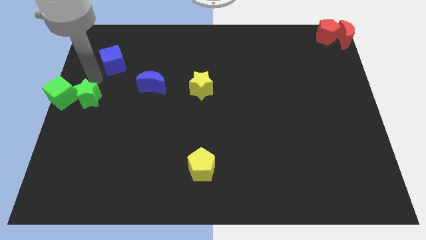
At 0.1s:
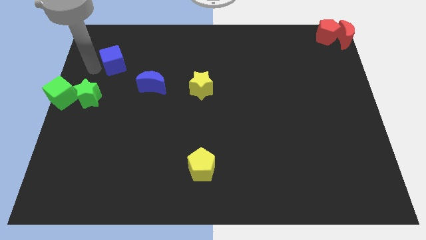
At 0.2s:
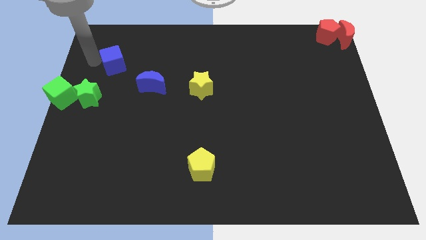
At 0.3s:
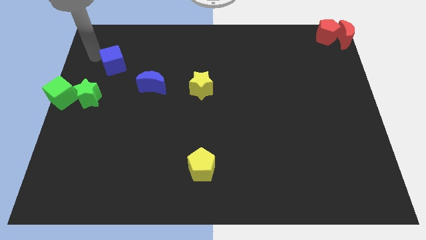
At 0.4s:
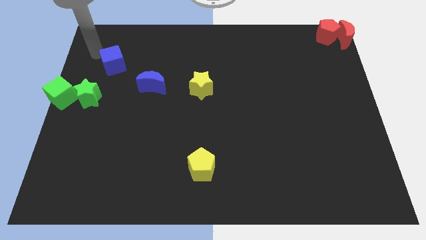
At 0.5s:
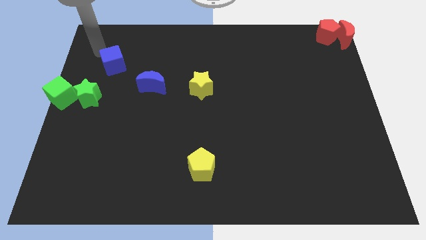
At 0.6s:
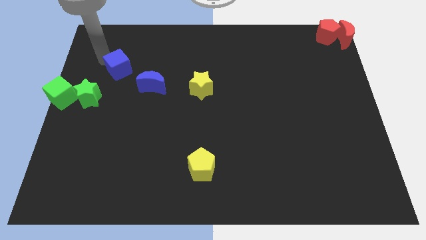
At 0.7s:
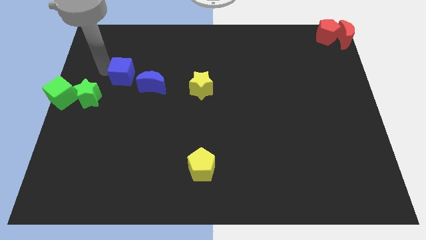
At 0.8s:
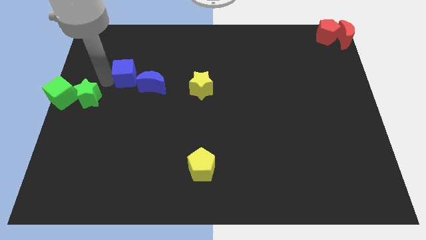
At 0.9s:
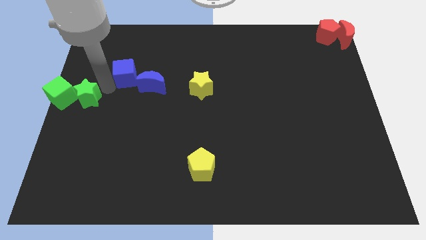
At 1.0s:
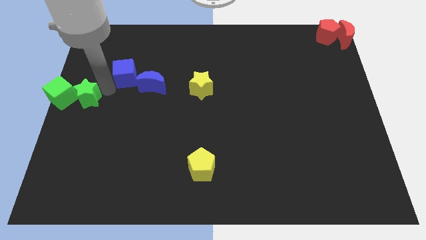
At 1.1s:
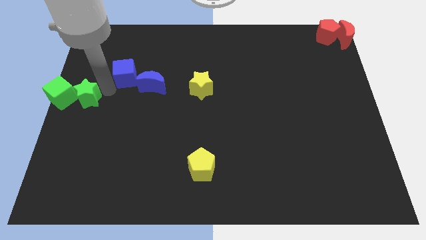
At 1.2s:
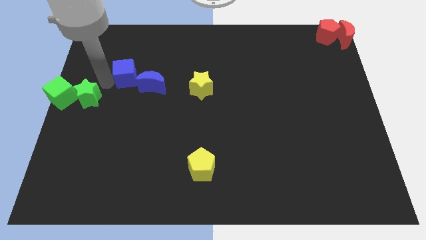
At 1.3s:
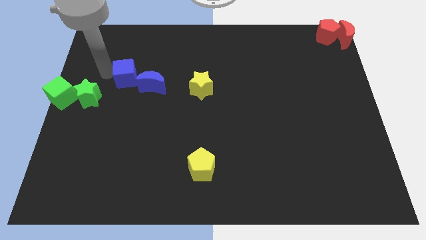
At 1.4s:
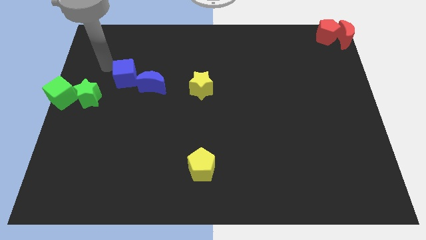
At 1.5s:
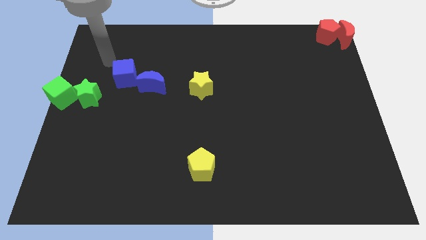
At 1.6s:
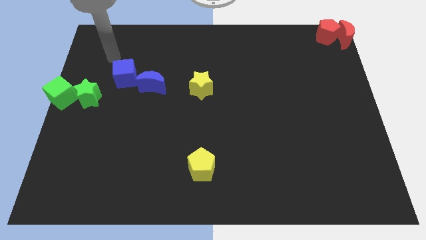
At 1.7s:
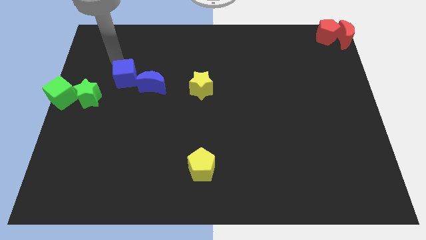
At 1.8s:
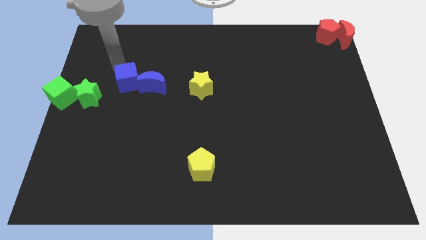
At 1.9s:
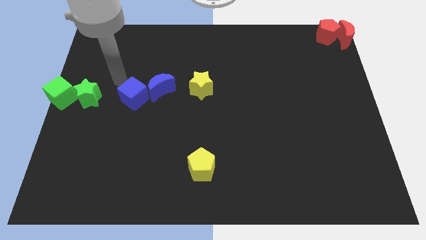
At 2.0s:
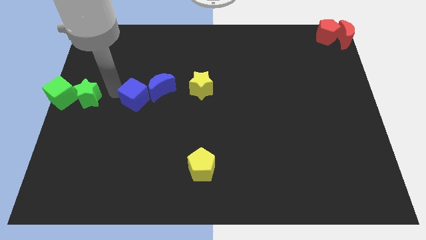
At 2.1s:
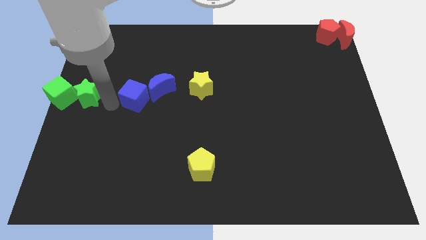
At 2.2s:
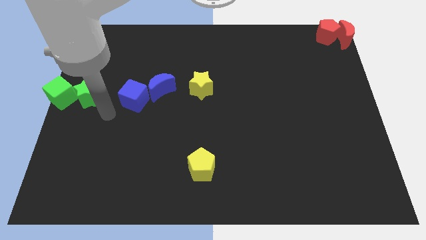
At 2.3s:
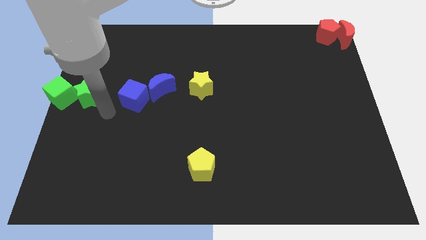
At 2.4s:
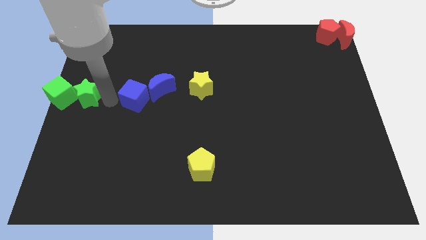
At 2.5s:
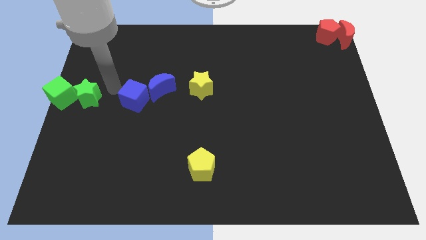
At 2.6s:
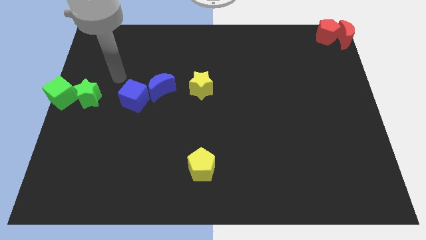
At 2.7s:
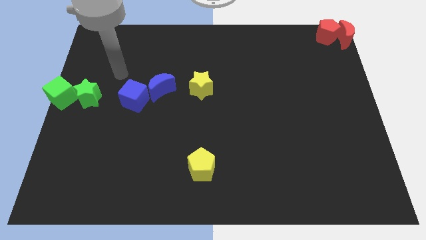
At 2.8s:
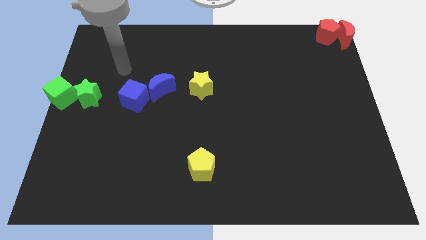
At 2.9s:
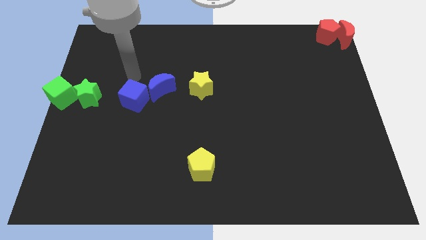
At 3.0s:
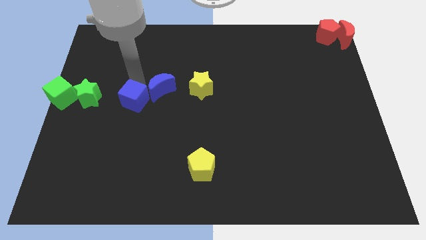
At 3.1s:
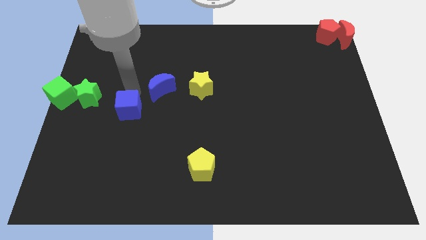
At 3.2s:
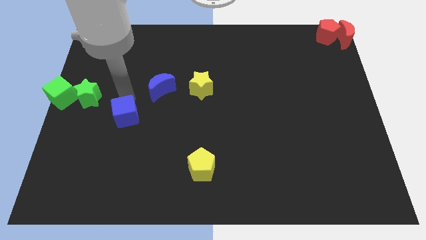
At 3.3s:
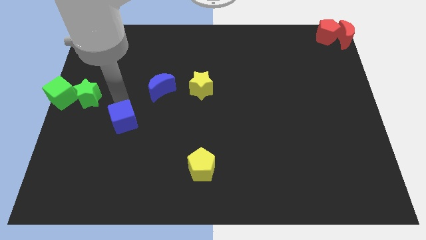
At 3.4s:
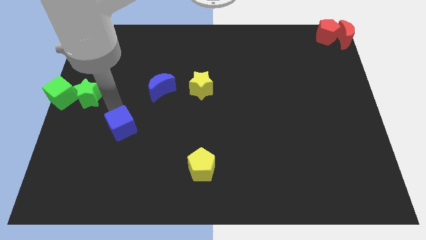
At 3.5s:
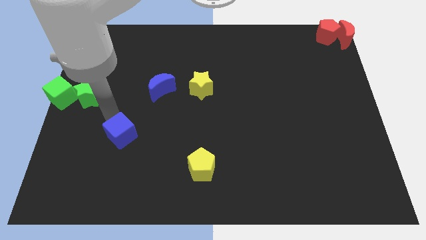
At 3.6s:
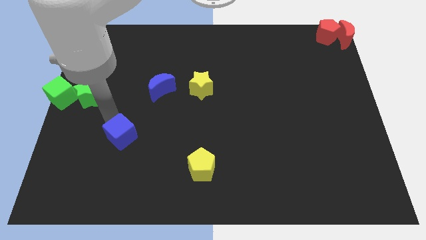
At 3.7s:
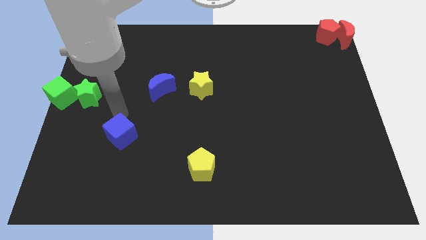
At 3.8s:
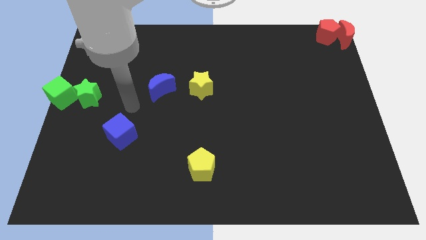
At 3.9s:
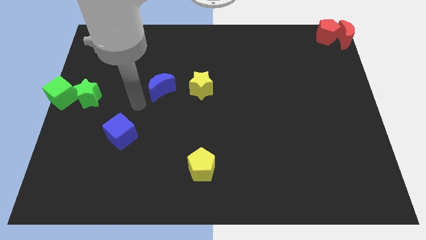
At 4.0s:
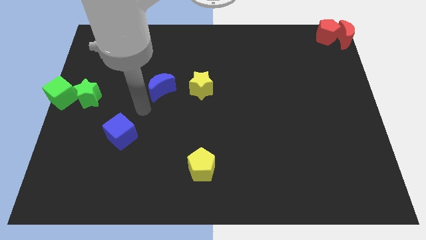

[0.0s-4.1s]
place the blue cube to the bottom side of the board

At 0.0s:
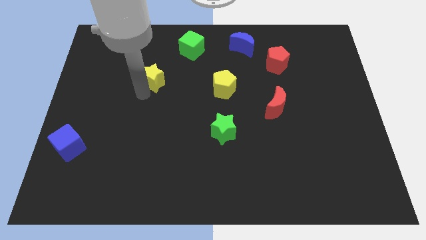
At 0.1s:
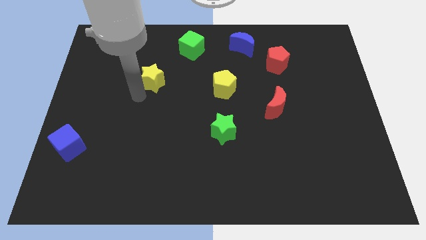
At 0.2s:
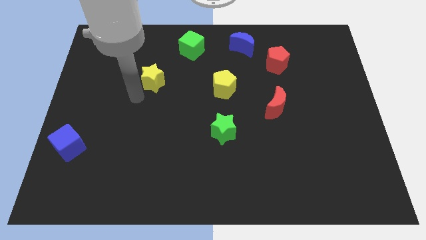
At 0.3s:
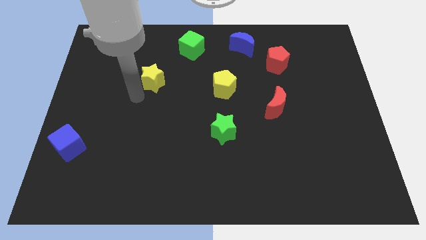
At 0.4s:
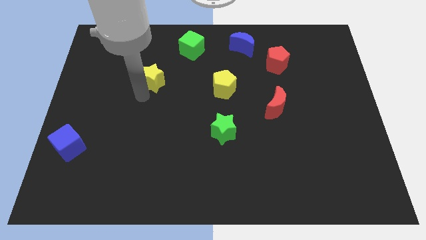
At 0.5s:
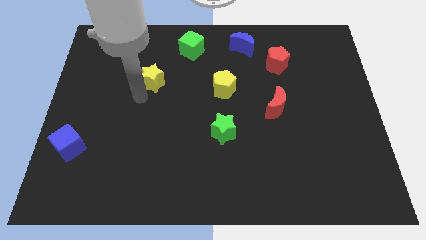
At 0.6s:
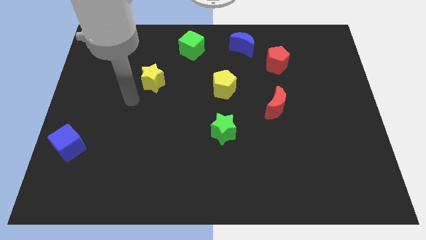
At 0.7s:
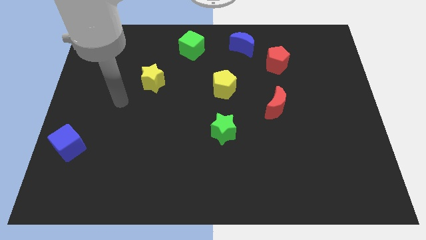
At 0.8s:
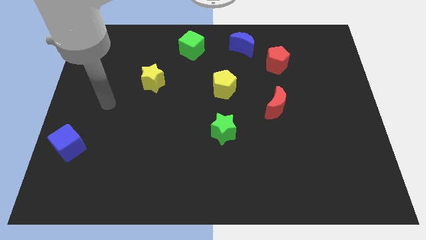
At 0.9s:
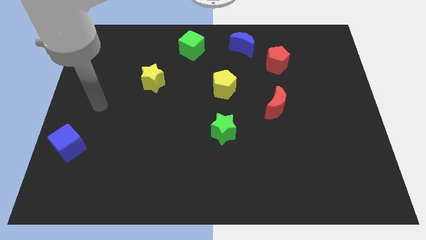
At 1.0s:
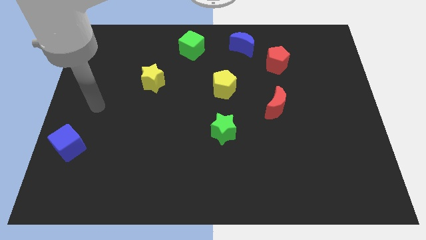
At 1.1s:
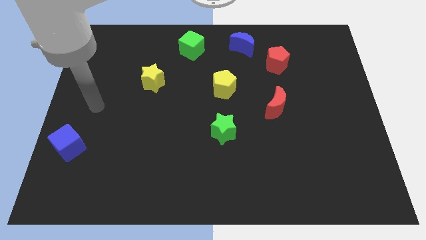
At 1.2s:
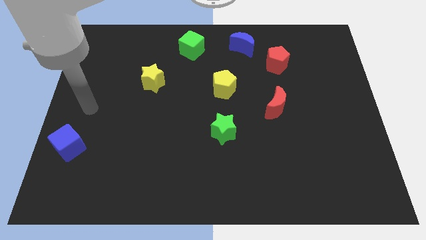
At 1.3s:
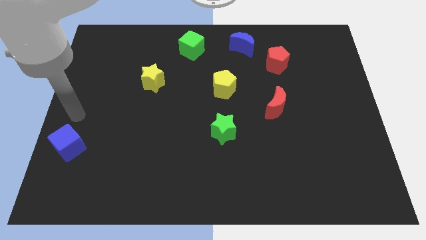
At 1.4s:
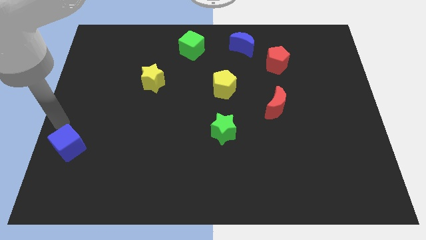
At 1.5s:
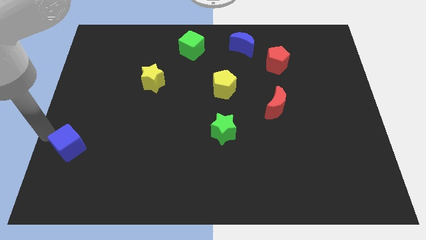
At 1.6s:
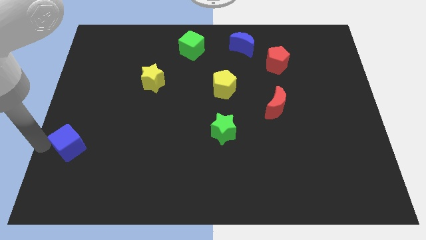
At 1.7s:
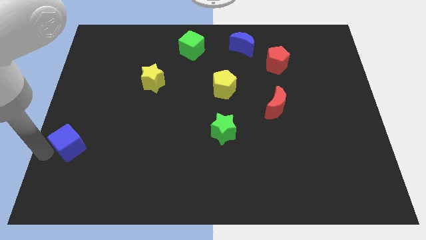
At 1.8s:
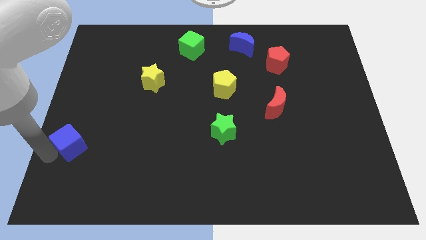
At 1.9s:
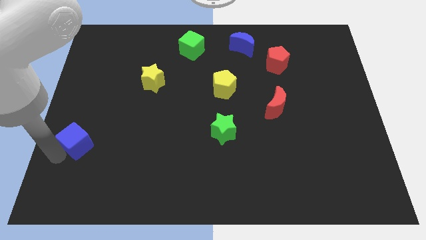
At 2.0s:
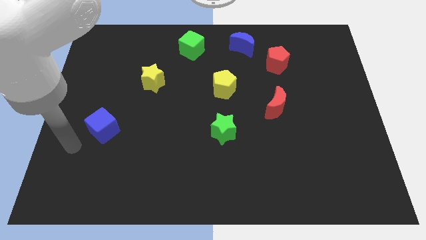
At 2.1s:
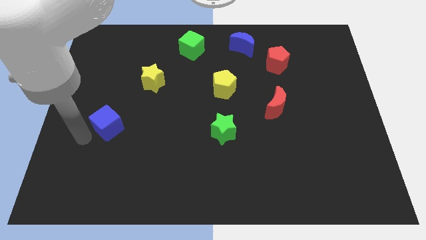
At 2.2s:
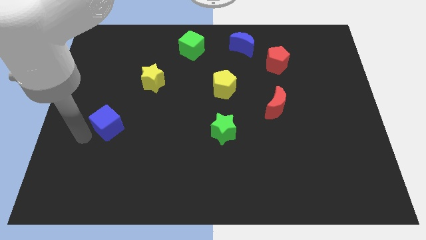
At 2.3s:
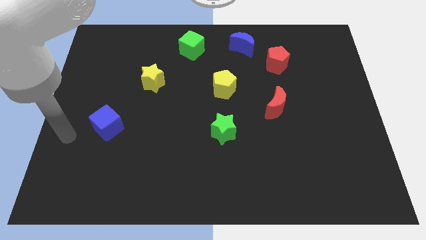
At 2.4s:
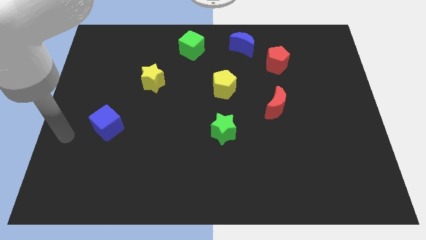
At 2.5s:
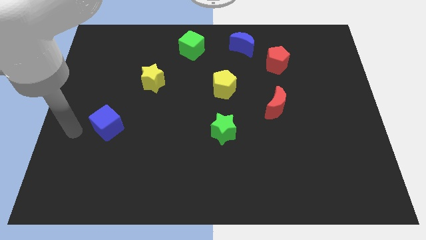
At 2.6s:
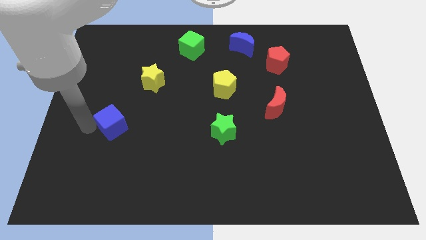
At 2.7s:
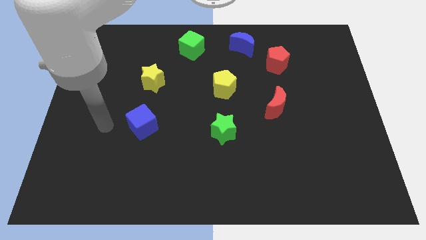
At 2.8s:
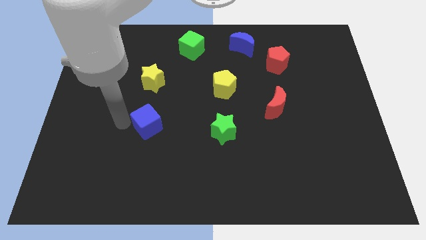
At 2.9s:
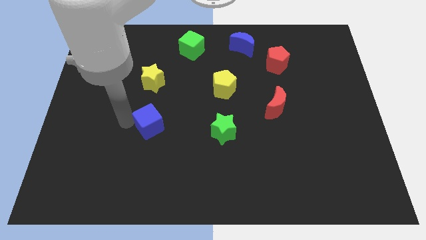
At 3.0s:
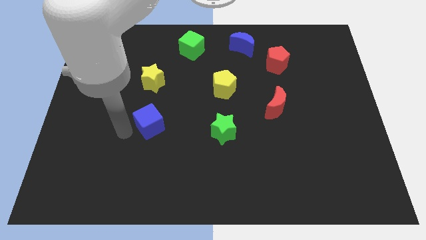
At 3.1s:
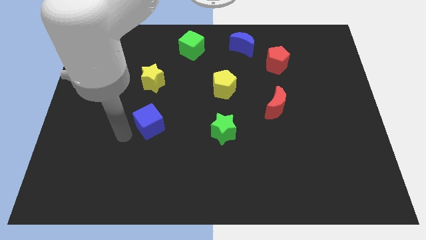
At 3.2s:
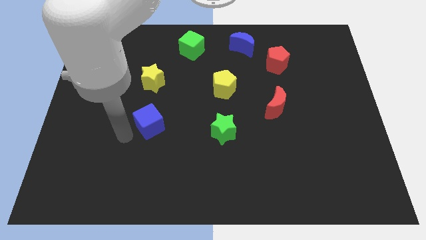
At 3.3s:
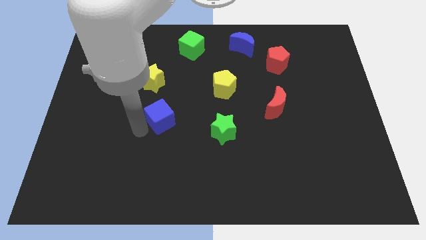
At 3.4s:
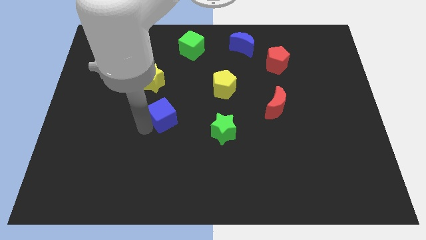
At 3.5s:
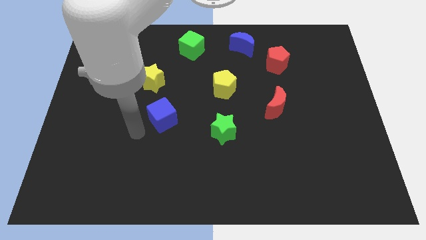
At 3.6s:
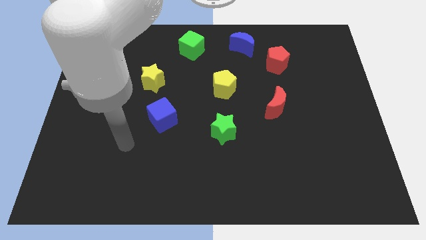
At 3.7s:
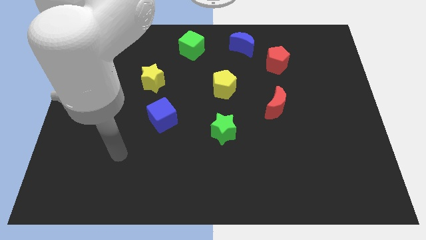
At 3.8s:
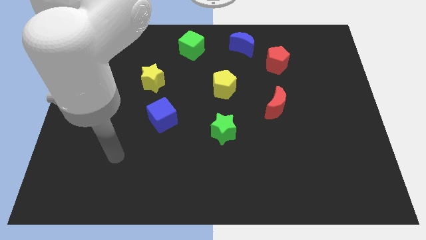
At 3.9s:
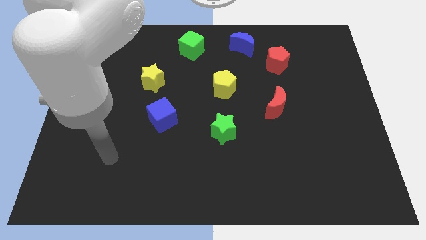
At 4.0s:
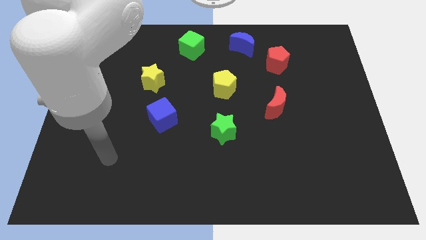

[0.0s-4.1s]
move the blue cube diagonal to the yellow star

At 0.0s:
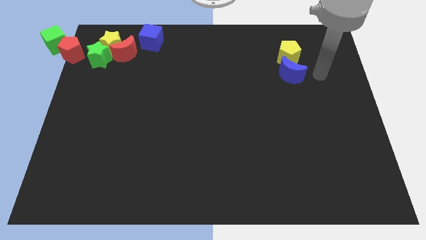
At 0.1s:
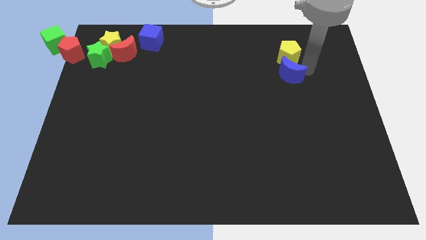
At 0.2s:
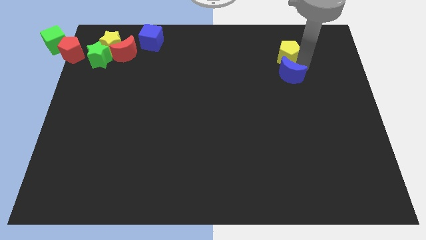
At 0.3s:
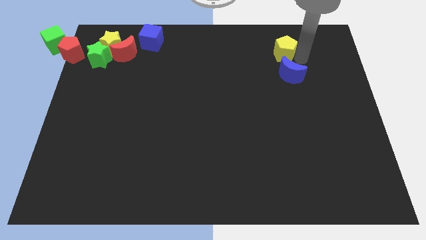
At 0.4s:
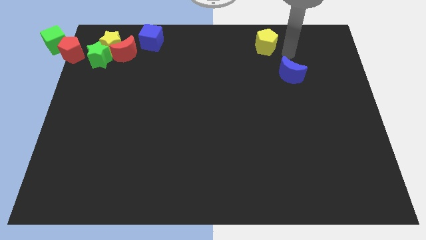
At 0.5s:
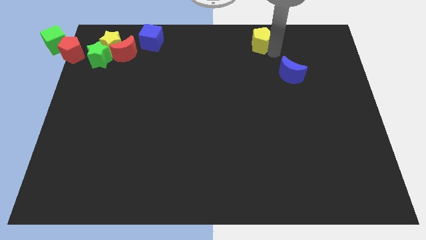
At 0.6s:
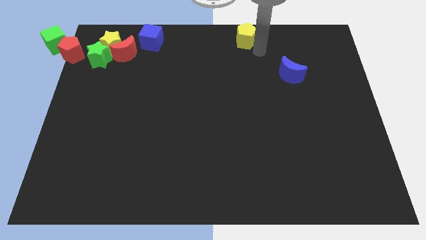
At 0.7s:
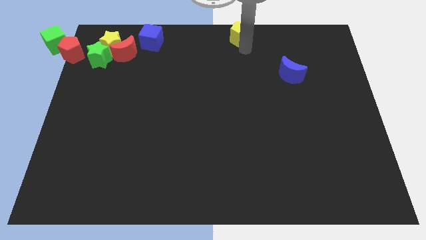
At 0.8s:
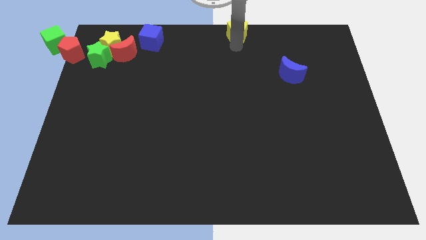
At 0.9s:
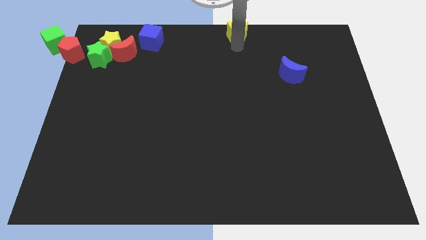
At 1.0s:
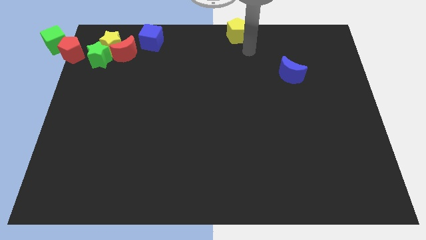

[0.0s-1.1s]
move the yellow pentagon to the top center
